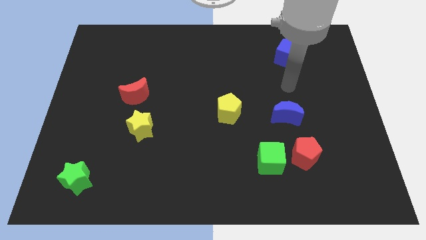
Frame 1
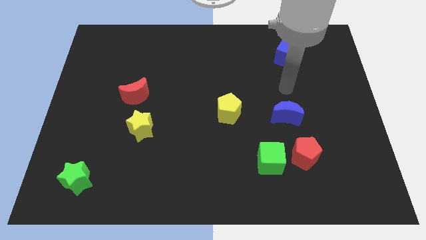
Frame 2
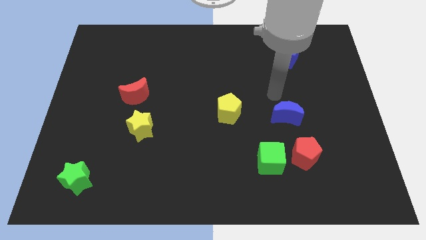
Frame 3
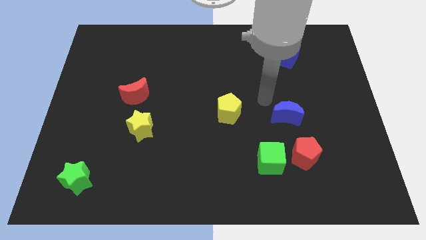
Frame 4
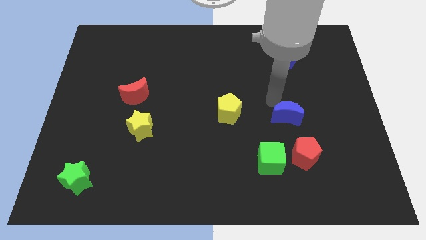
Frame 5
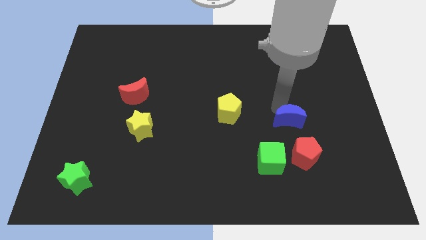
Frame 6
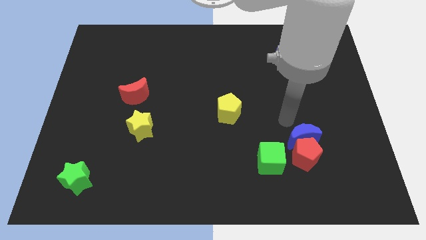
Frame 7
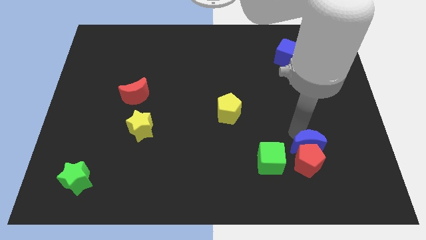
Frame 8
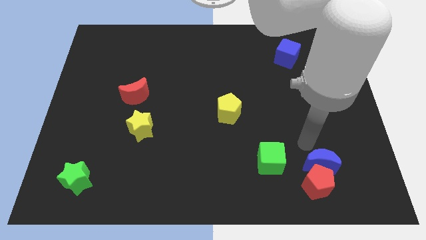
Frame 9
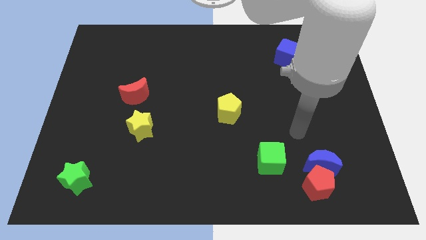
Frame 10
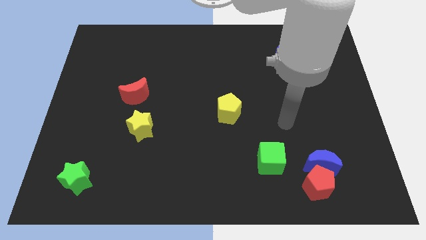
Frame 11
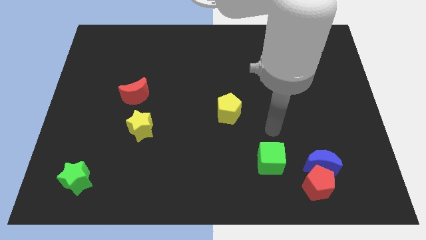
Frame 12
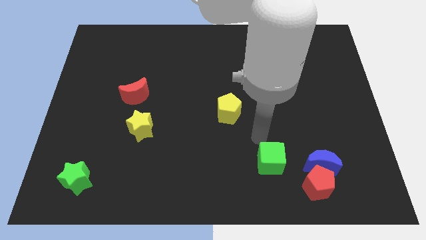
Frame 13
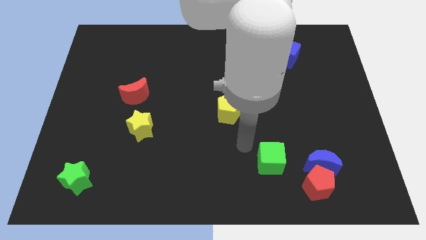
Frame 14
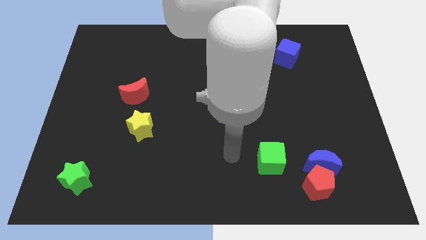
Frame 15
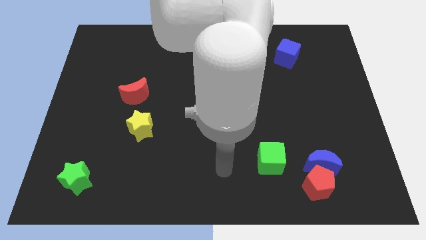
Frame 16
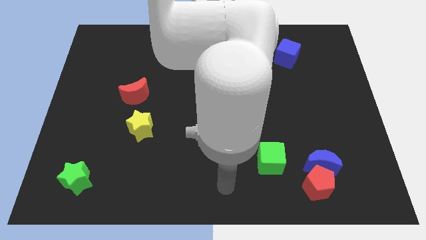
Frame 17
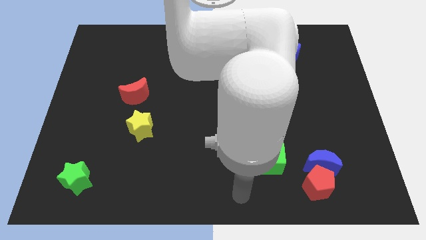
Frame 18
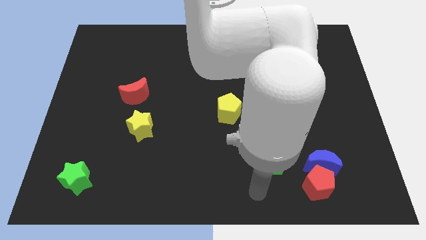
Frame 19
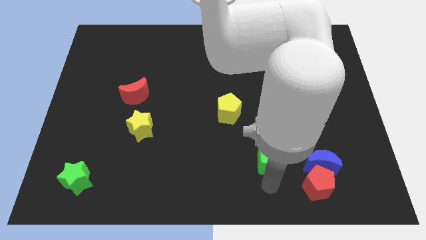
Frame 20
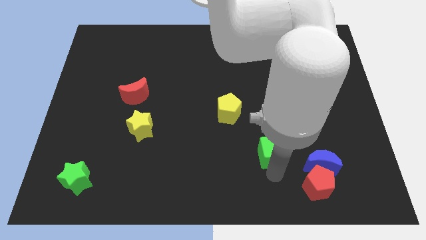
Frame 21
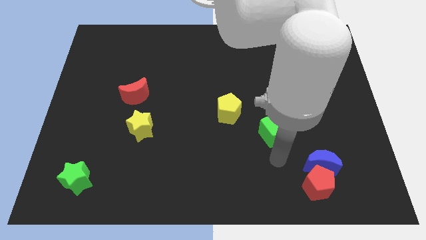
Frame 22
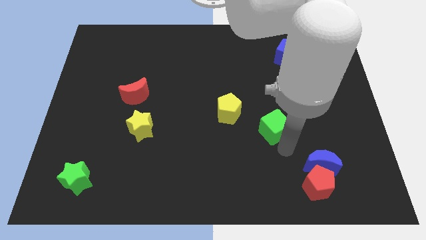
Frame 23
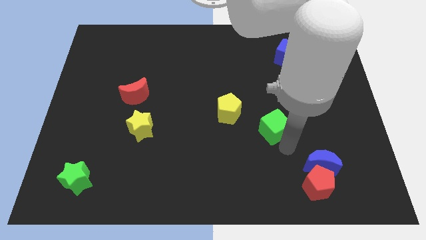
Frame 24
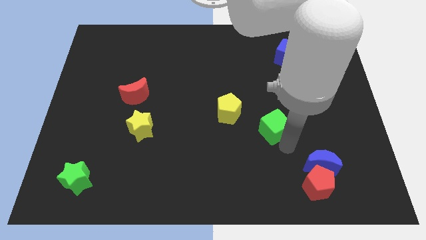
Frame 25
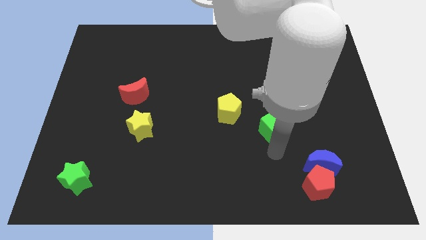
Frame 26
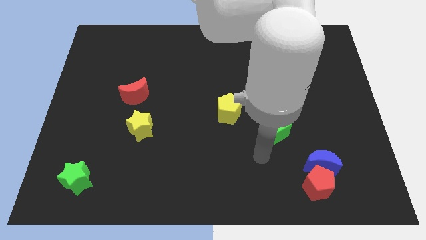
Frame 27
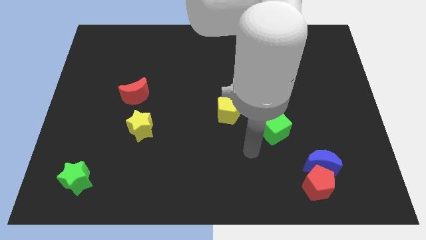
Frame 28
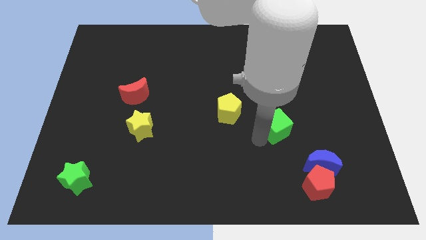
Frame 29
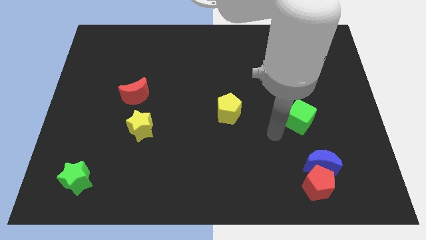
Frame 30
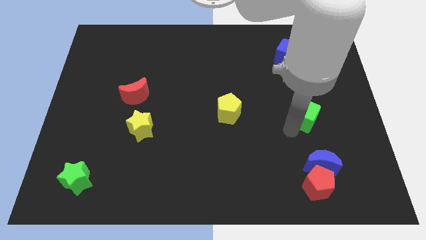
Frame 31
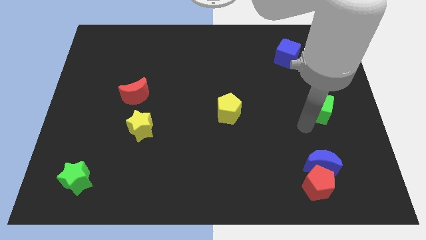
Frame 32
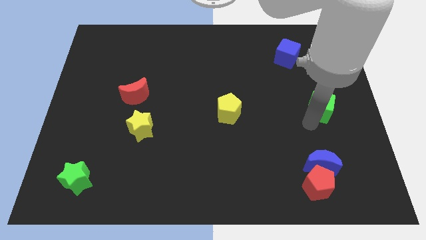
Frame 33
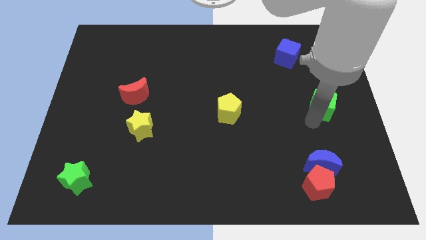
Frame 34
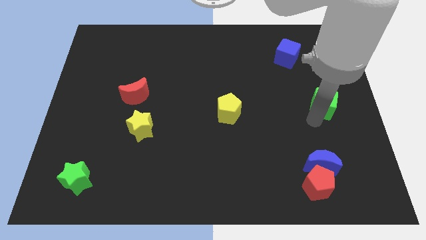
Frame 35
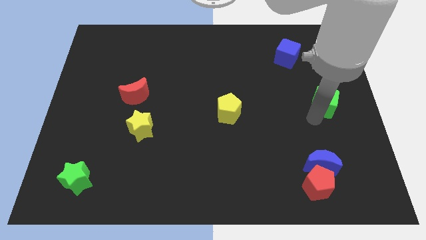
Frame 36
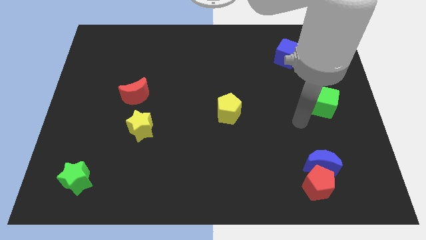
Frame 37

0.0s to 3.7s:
move the green cube in between the blue cube and blue crescent

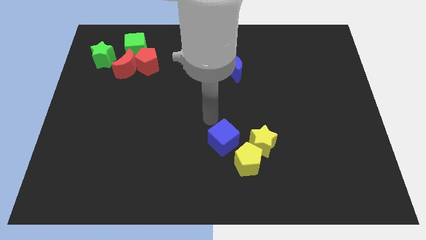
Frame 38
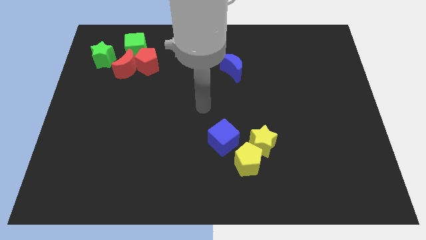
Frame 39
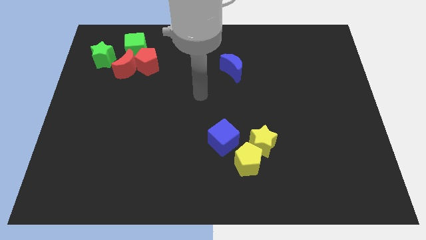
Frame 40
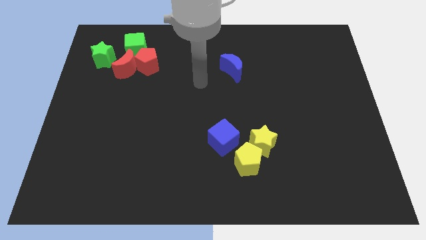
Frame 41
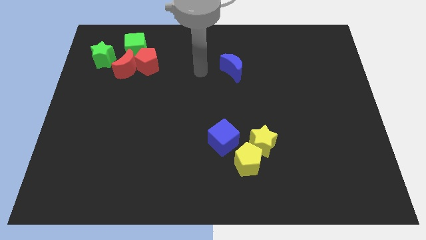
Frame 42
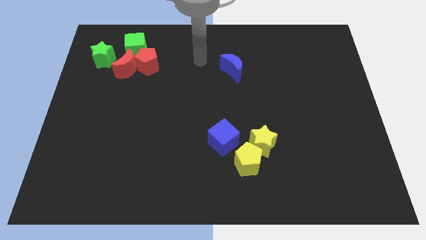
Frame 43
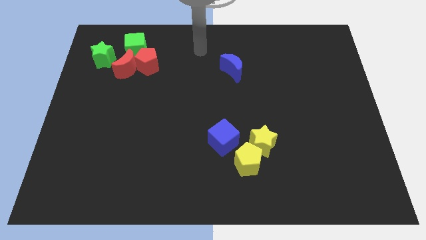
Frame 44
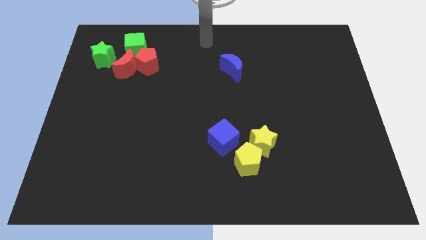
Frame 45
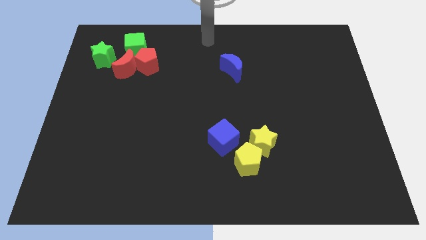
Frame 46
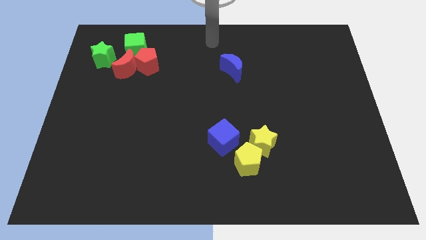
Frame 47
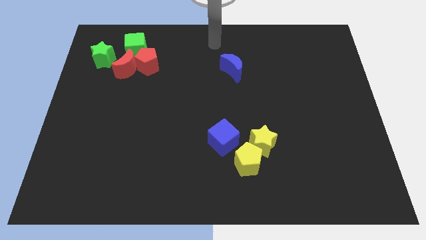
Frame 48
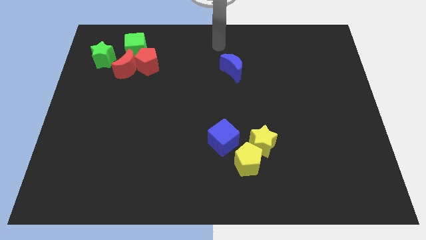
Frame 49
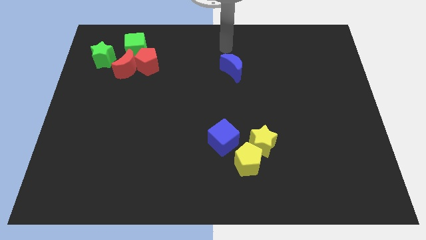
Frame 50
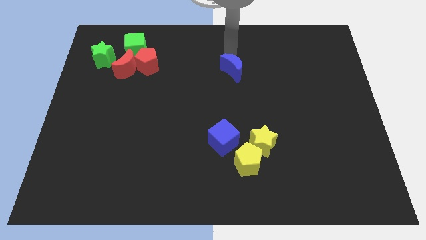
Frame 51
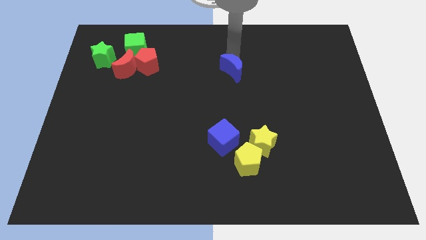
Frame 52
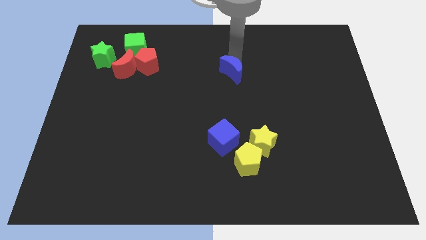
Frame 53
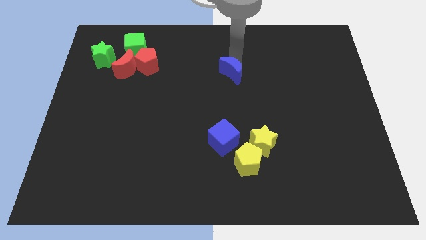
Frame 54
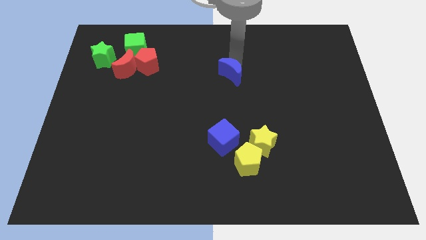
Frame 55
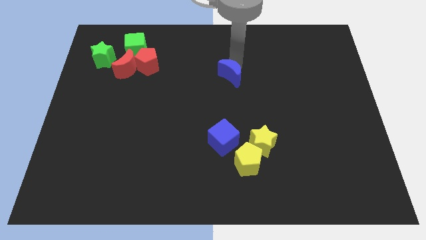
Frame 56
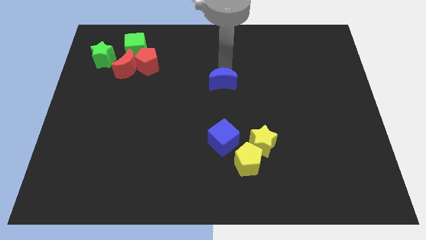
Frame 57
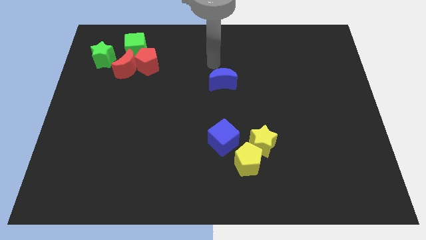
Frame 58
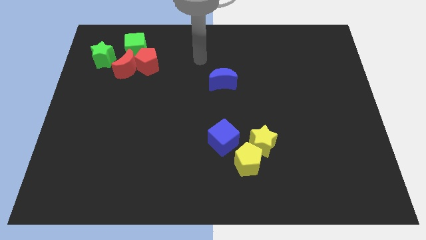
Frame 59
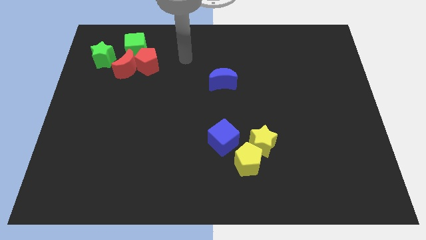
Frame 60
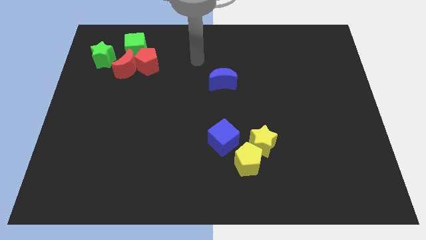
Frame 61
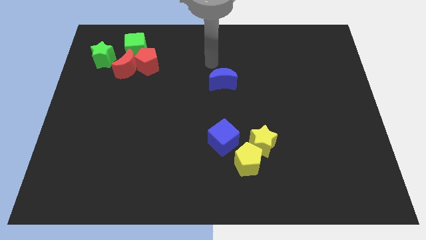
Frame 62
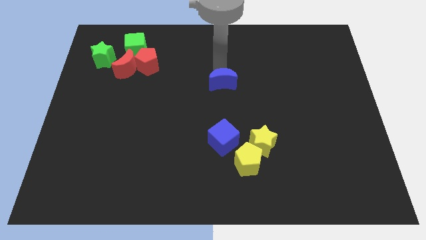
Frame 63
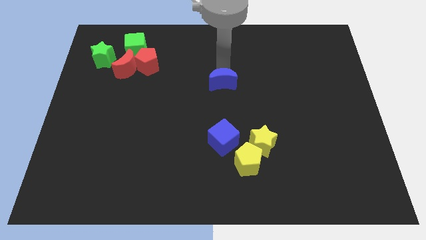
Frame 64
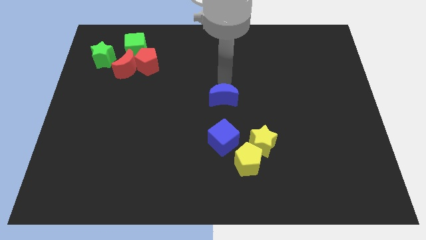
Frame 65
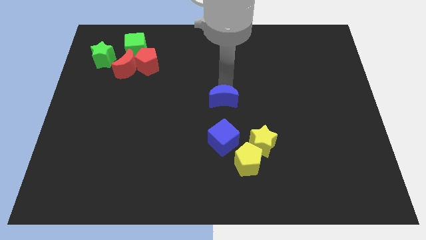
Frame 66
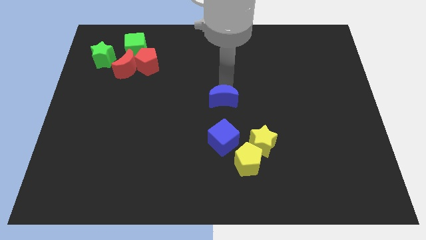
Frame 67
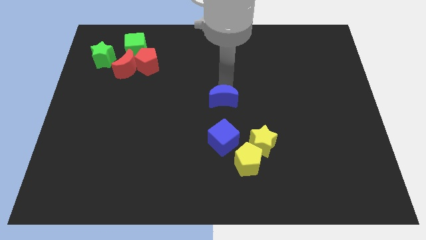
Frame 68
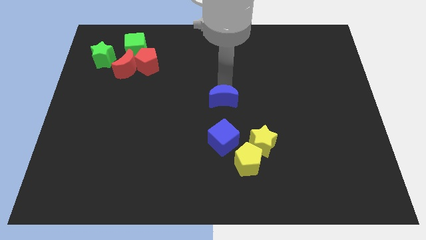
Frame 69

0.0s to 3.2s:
place the blue moon close to the blue cube

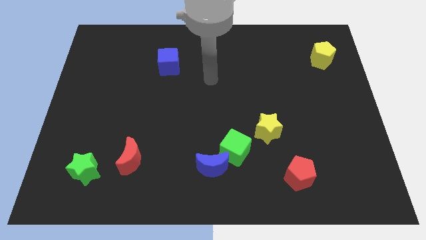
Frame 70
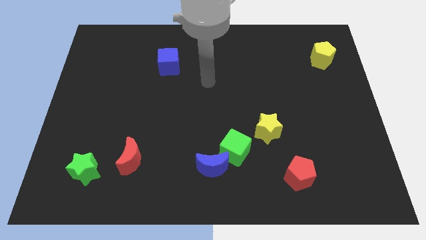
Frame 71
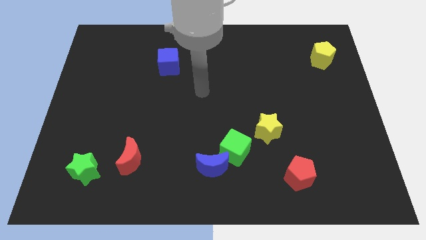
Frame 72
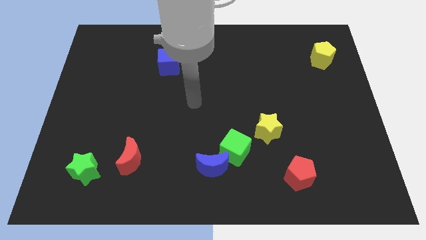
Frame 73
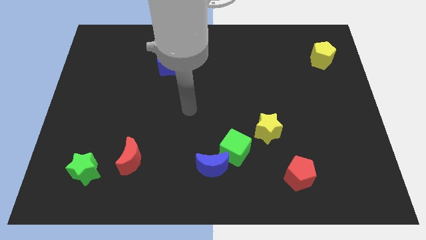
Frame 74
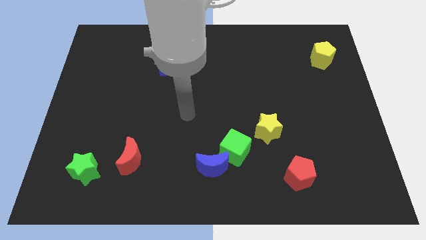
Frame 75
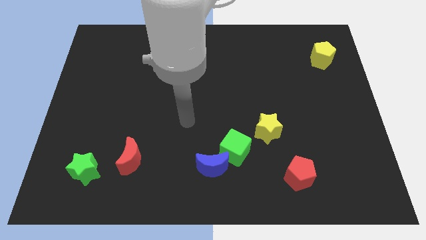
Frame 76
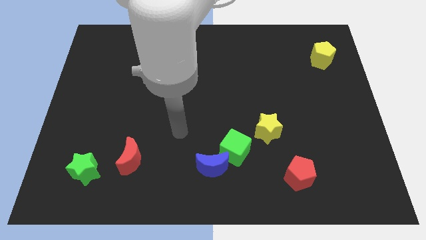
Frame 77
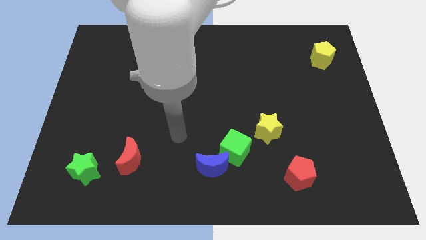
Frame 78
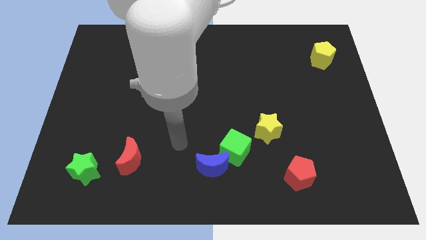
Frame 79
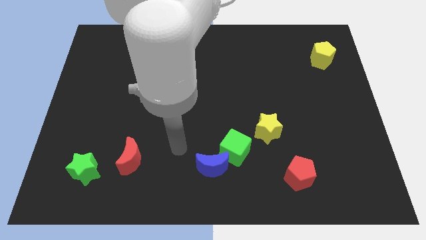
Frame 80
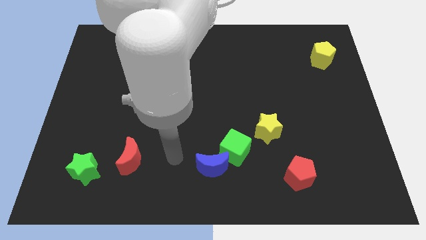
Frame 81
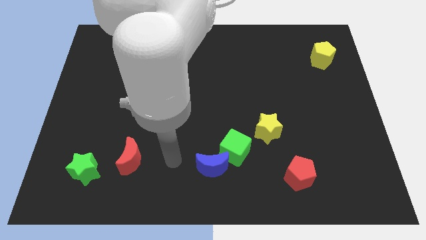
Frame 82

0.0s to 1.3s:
point the arm to the left side of the blue crescent

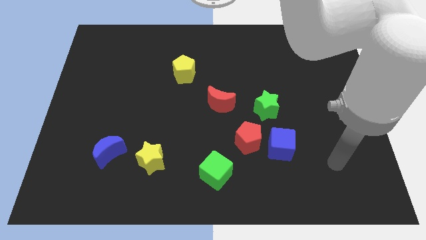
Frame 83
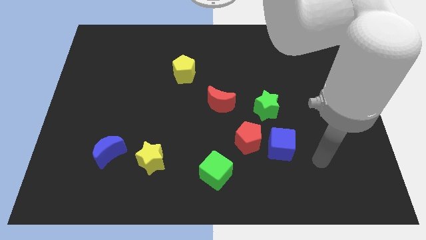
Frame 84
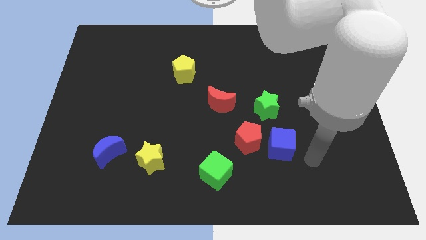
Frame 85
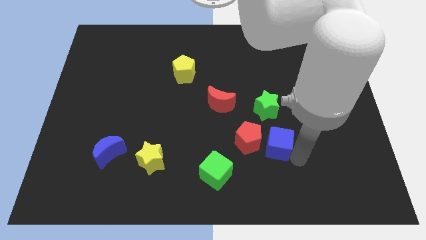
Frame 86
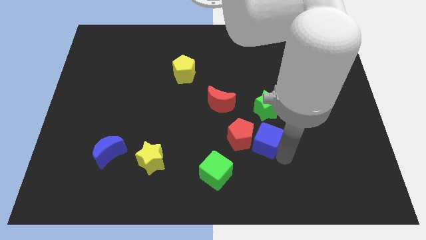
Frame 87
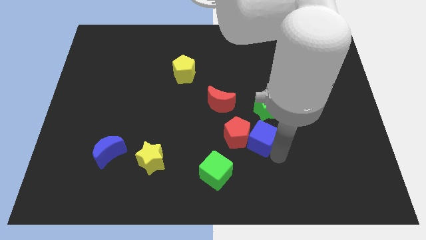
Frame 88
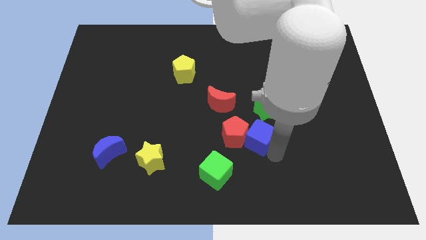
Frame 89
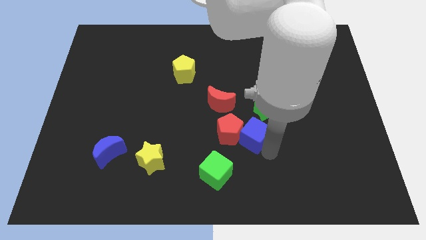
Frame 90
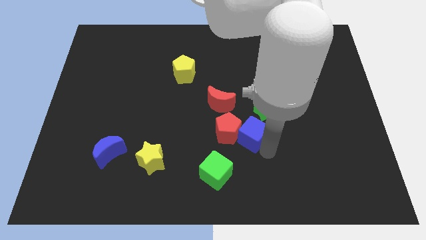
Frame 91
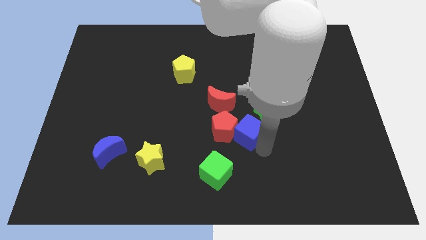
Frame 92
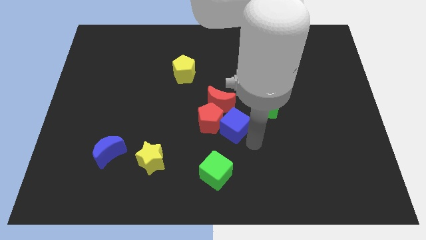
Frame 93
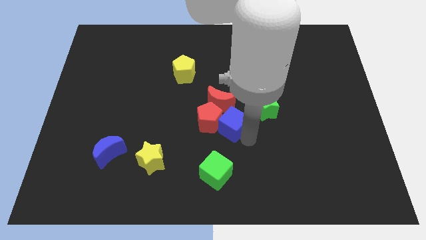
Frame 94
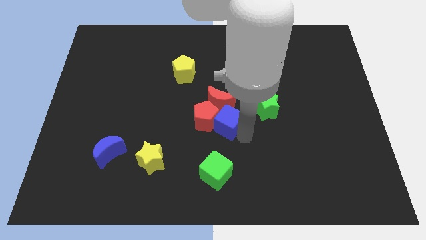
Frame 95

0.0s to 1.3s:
slide the red pentagon and blue cube into the red crescent
